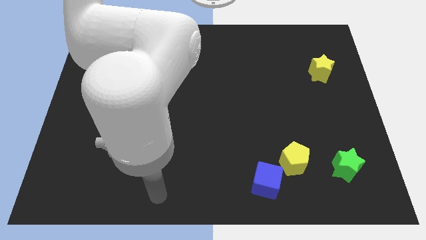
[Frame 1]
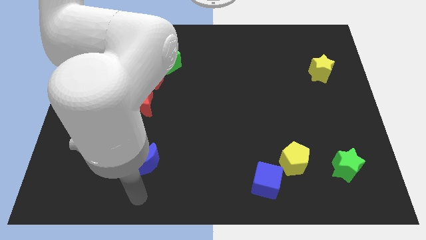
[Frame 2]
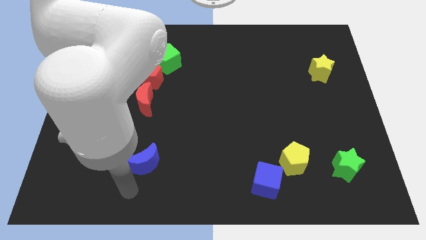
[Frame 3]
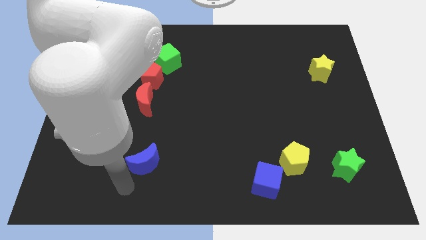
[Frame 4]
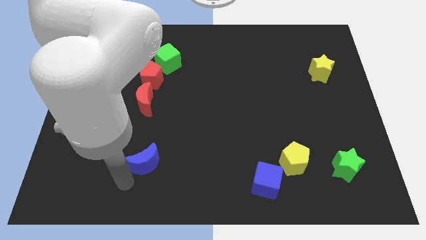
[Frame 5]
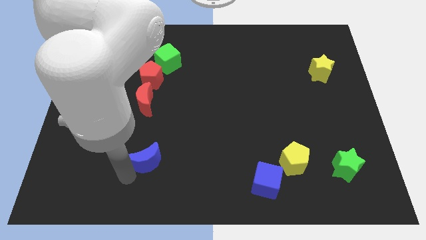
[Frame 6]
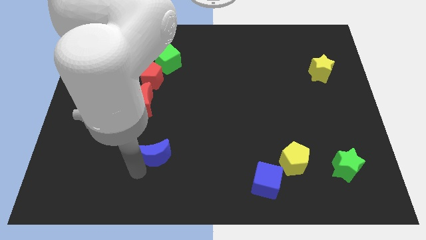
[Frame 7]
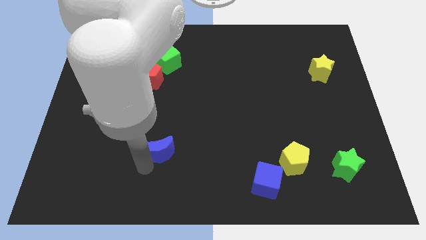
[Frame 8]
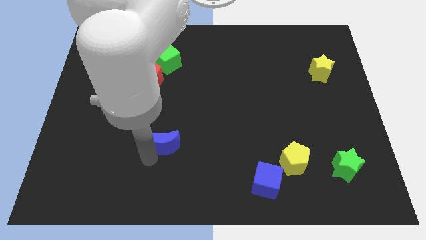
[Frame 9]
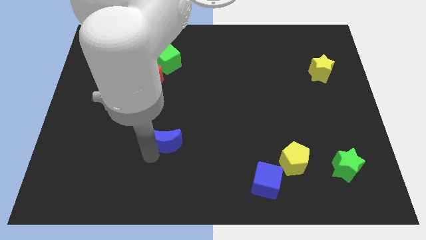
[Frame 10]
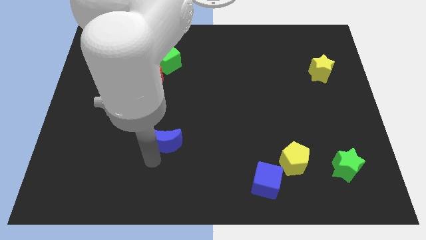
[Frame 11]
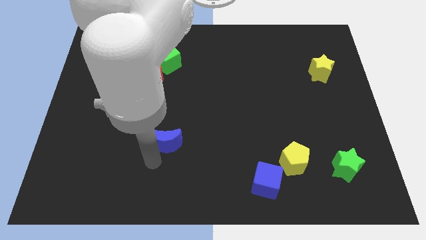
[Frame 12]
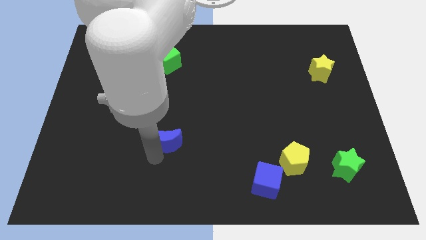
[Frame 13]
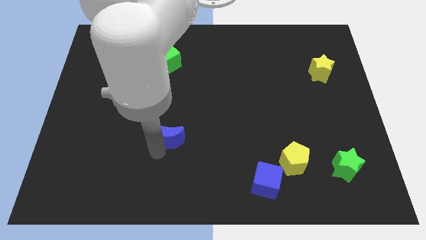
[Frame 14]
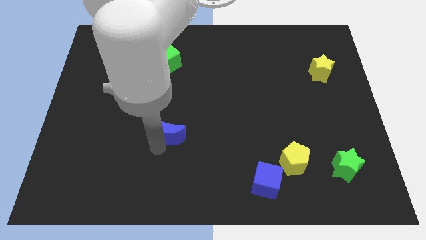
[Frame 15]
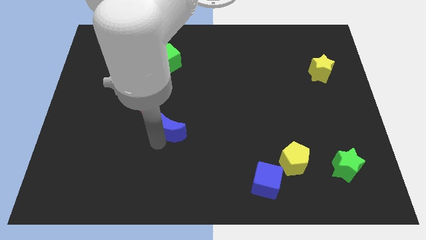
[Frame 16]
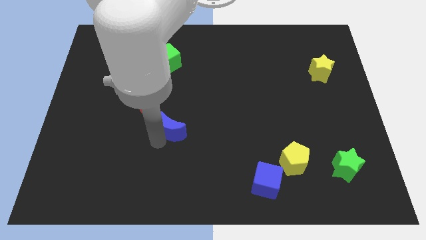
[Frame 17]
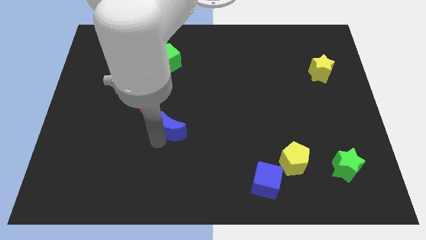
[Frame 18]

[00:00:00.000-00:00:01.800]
push the blue moon slightly to the center of the board

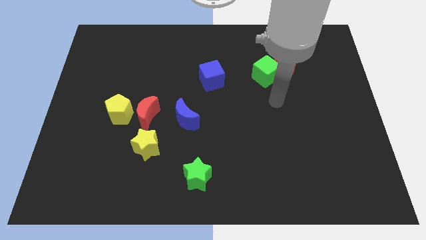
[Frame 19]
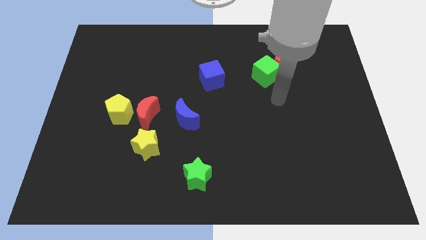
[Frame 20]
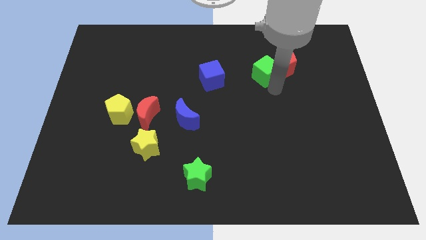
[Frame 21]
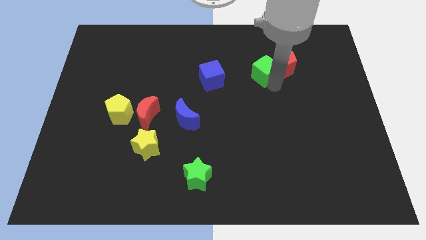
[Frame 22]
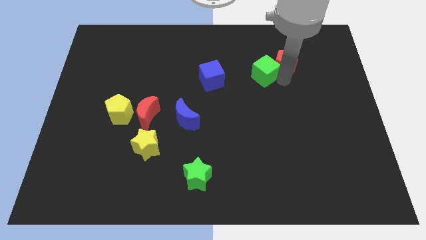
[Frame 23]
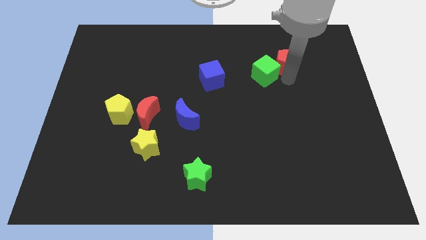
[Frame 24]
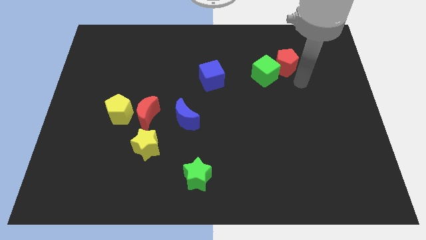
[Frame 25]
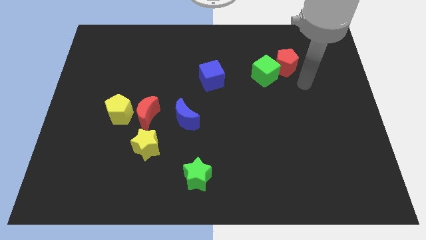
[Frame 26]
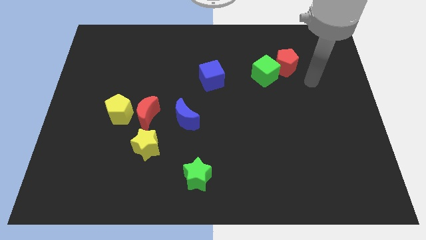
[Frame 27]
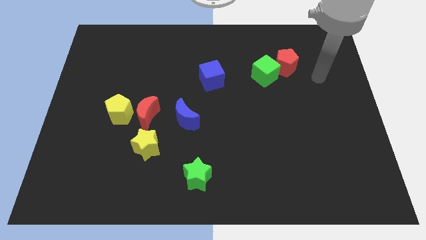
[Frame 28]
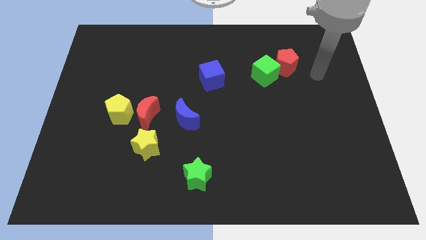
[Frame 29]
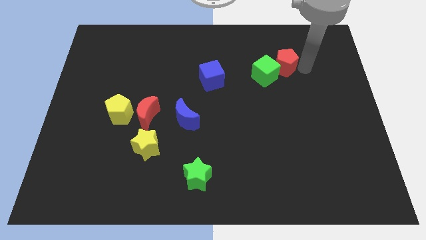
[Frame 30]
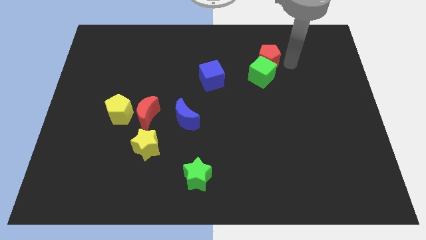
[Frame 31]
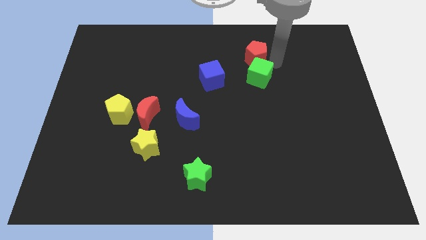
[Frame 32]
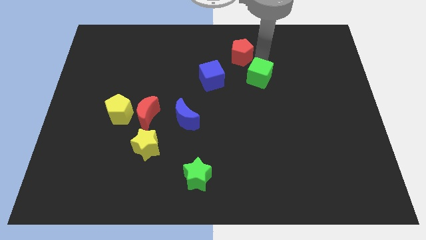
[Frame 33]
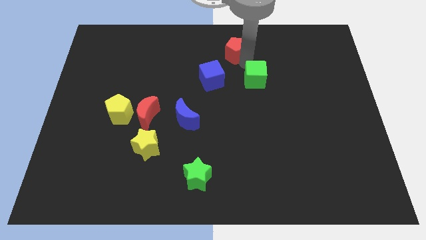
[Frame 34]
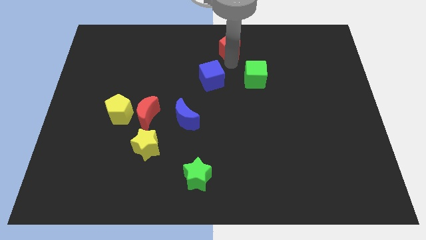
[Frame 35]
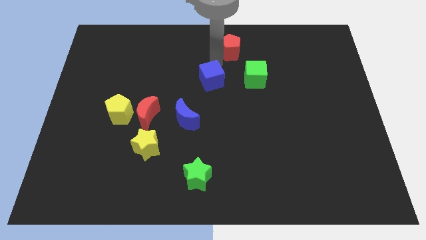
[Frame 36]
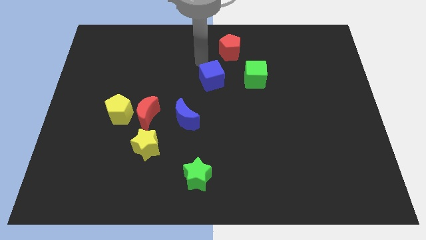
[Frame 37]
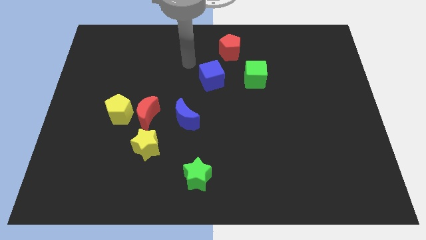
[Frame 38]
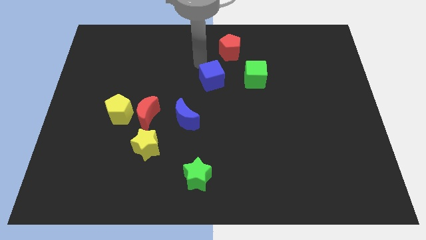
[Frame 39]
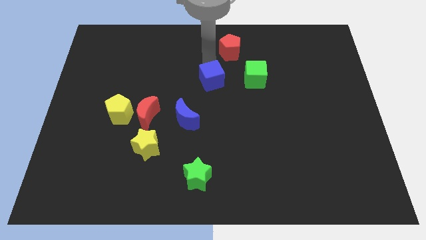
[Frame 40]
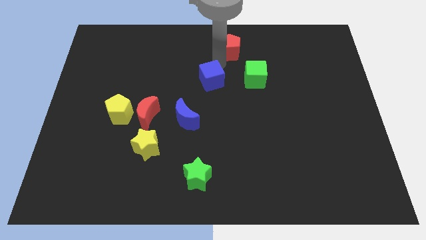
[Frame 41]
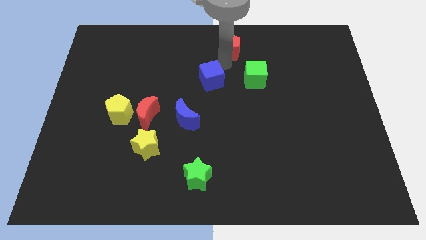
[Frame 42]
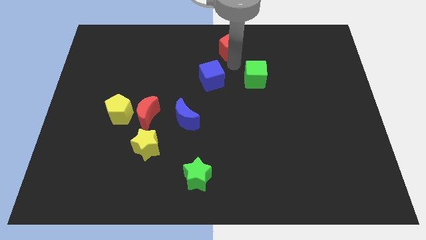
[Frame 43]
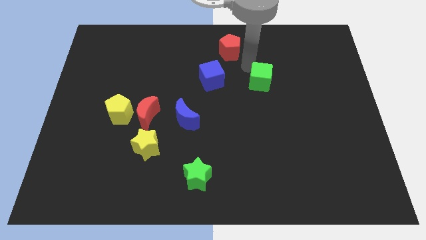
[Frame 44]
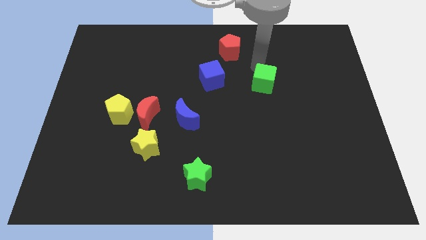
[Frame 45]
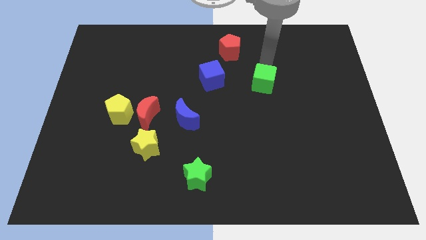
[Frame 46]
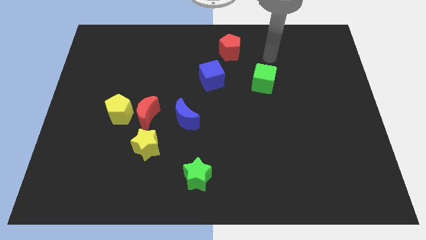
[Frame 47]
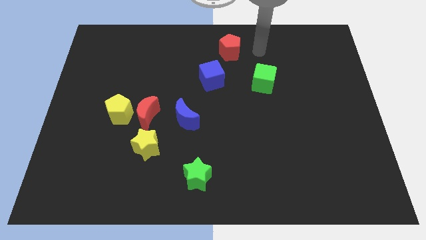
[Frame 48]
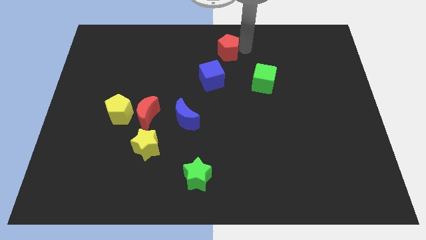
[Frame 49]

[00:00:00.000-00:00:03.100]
form a triangle with the green cube blue cube and red pentagon at the top side of the board

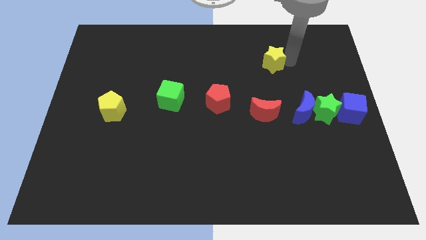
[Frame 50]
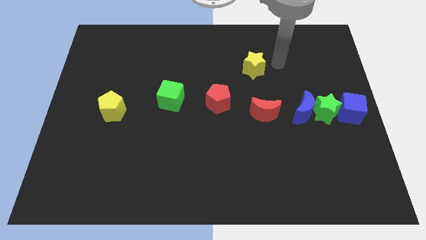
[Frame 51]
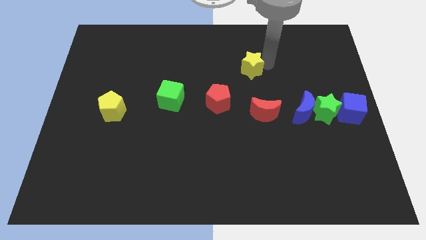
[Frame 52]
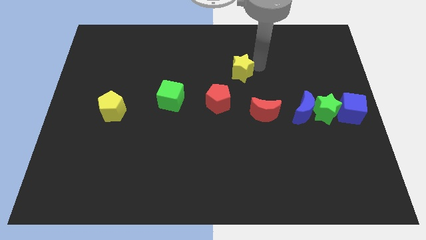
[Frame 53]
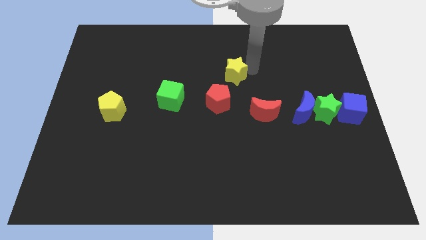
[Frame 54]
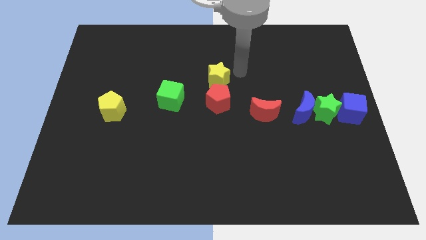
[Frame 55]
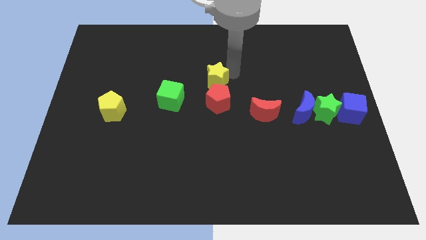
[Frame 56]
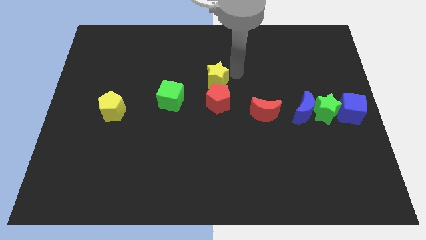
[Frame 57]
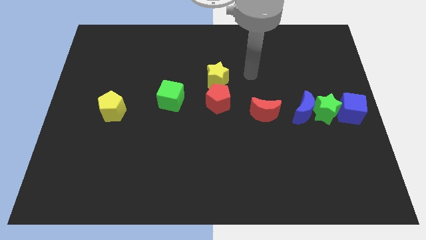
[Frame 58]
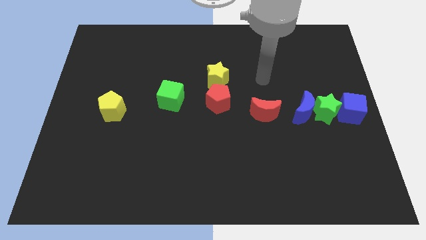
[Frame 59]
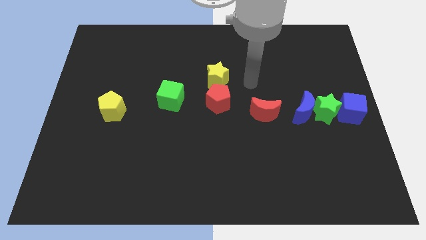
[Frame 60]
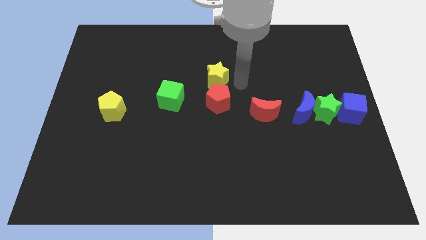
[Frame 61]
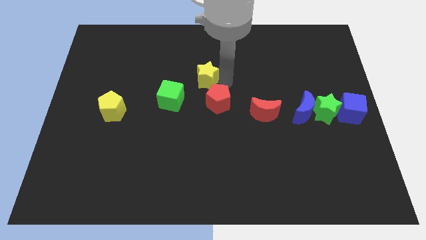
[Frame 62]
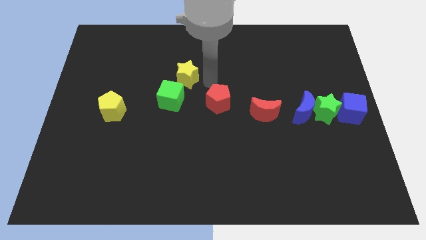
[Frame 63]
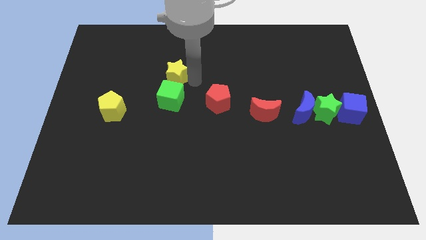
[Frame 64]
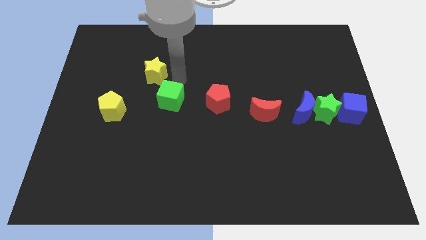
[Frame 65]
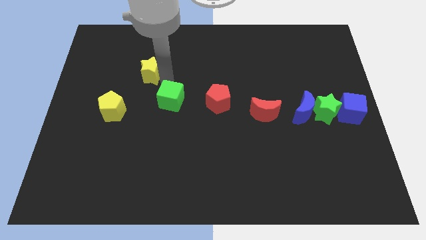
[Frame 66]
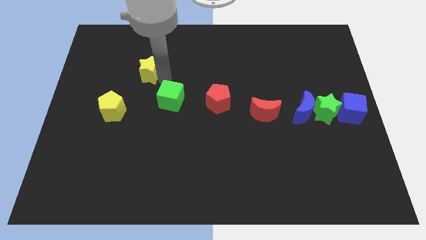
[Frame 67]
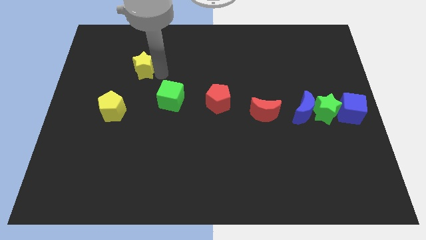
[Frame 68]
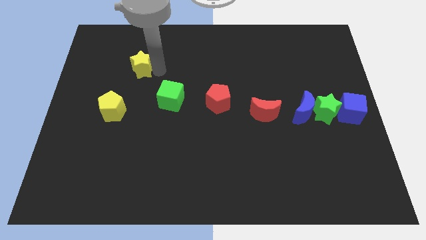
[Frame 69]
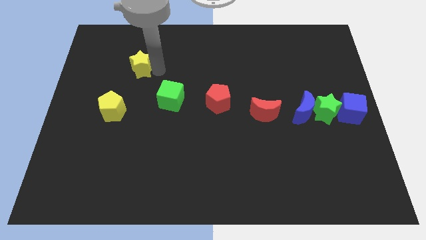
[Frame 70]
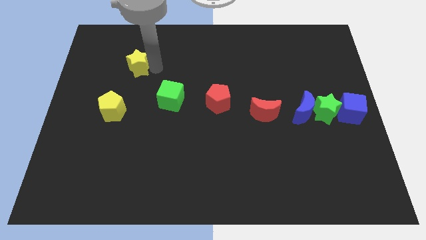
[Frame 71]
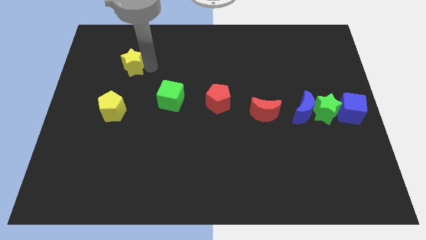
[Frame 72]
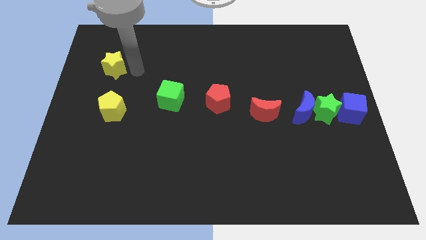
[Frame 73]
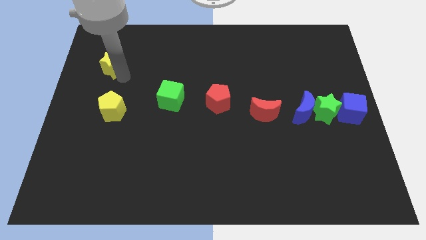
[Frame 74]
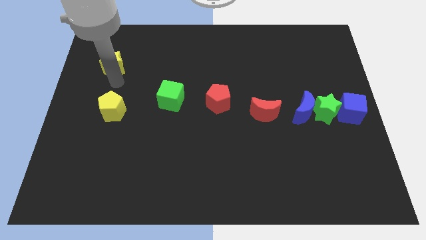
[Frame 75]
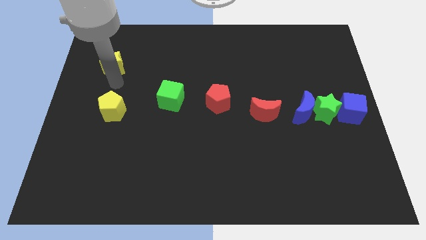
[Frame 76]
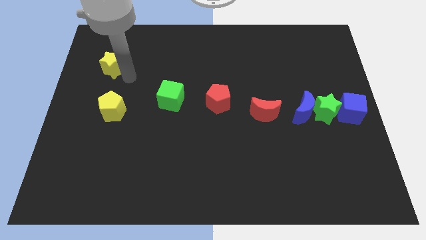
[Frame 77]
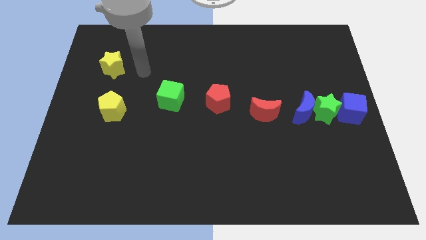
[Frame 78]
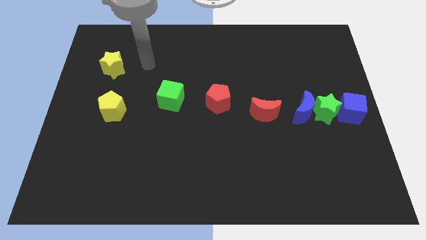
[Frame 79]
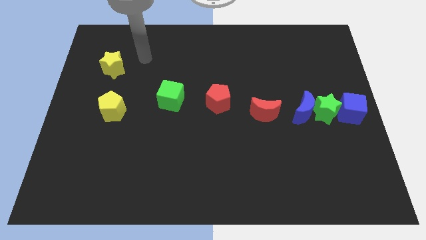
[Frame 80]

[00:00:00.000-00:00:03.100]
slide yellow star above yellow pentagon

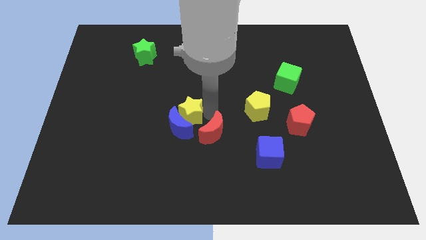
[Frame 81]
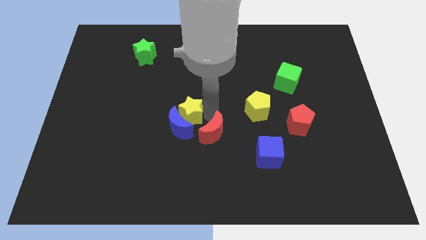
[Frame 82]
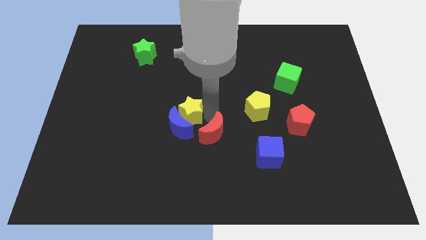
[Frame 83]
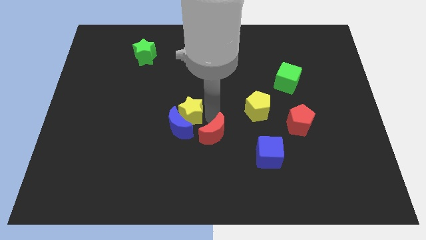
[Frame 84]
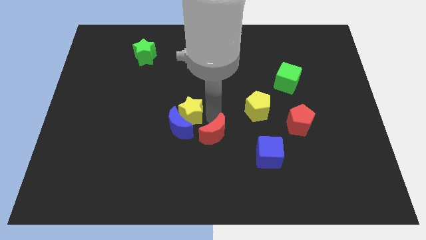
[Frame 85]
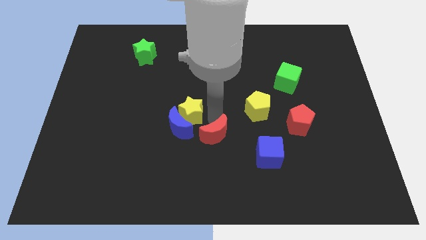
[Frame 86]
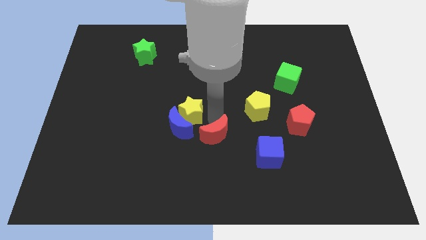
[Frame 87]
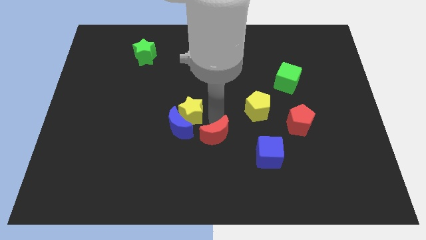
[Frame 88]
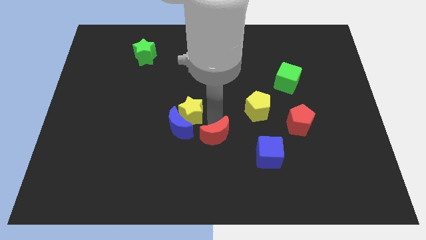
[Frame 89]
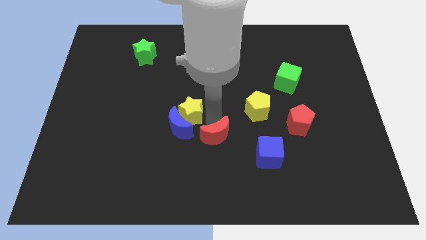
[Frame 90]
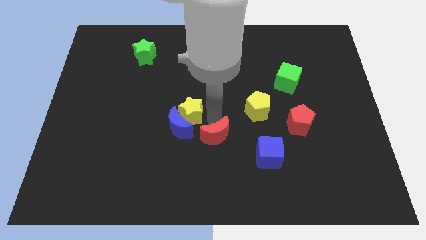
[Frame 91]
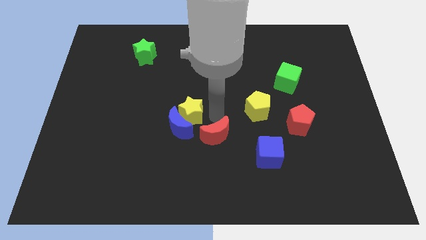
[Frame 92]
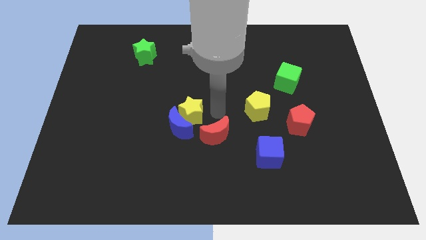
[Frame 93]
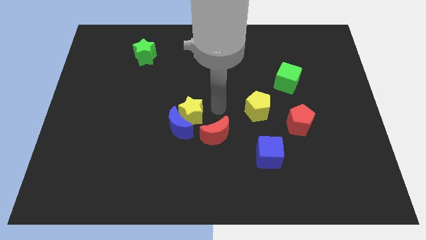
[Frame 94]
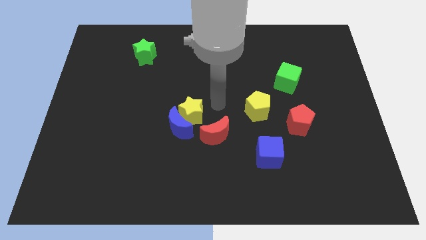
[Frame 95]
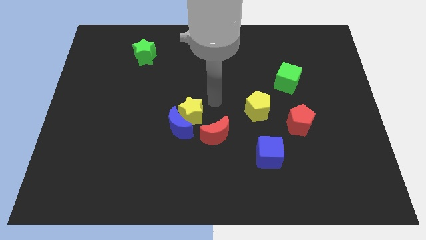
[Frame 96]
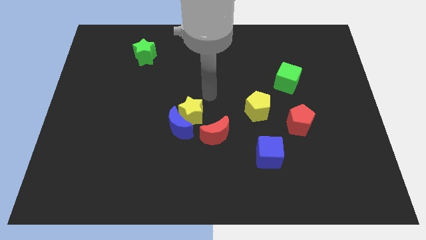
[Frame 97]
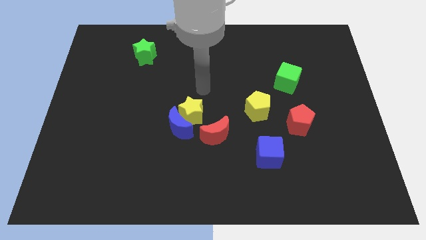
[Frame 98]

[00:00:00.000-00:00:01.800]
move your arm away from red moon
